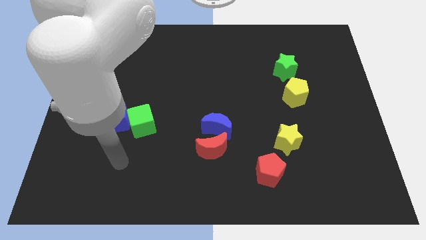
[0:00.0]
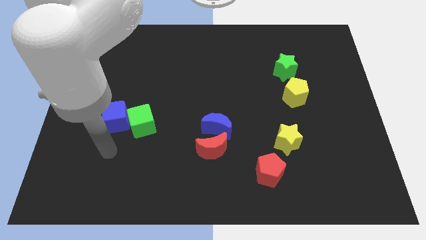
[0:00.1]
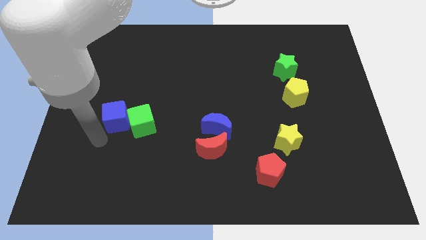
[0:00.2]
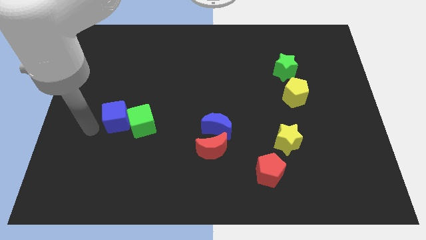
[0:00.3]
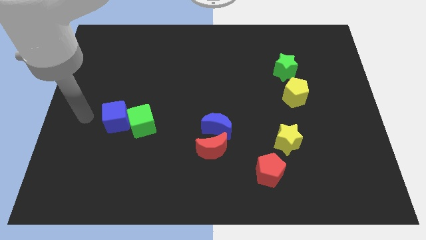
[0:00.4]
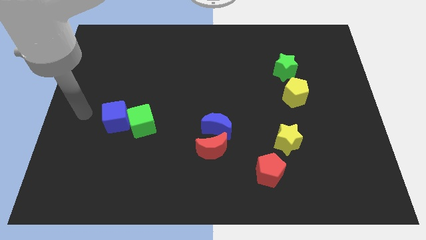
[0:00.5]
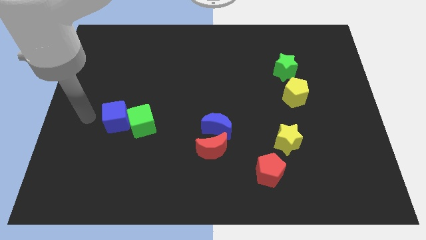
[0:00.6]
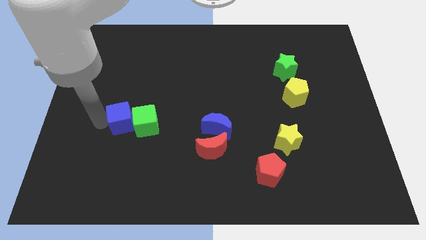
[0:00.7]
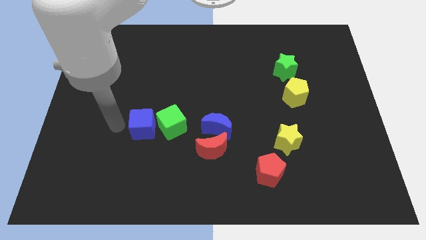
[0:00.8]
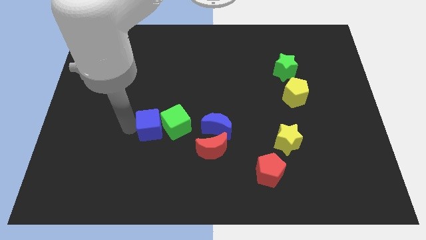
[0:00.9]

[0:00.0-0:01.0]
push blue cube in to green cube

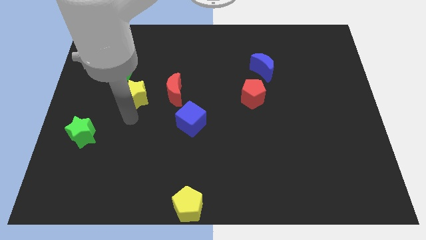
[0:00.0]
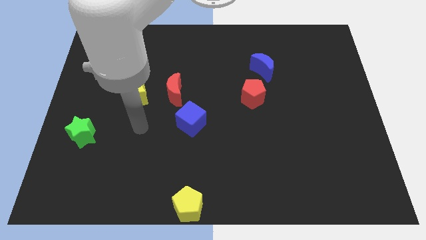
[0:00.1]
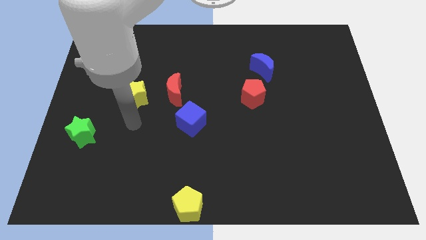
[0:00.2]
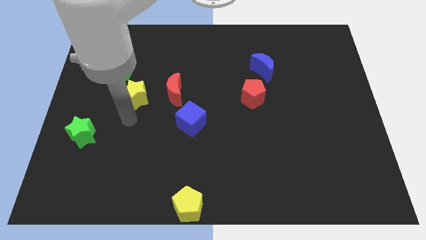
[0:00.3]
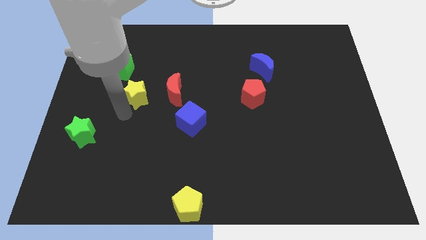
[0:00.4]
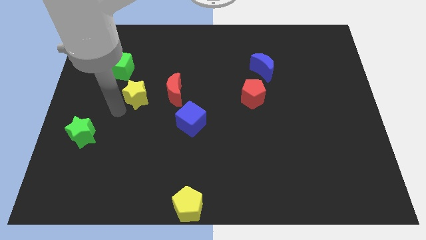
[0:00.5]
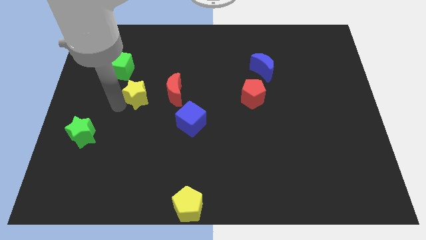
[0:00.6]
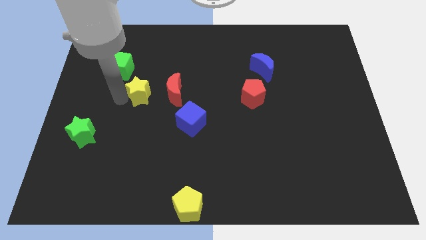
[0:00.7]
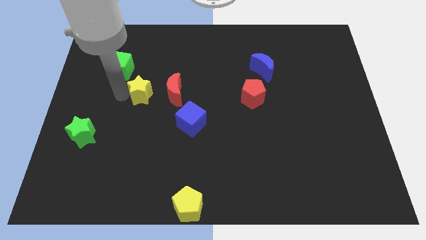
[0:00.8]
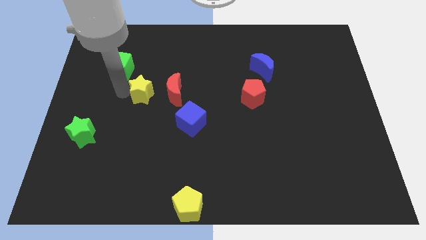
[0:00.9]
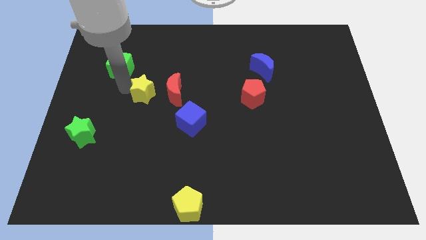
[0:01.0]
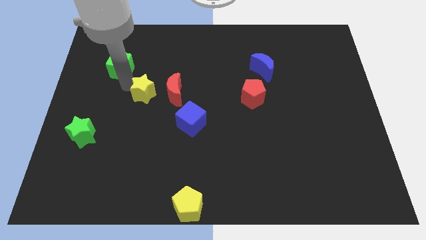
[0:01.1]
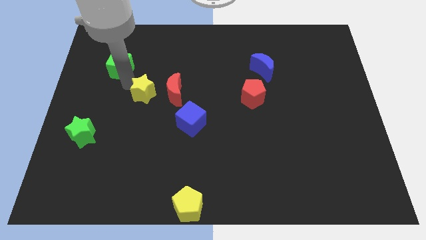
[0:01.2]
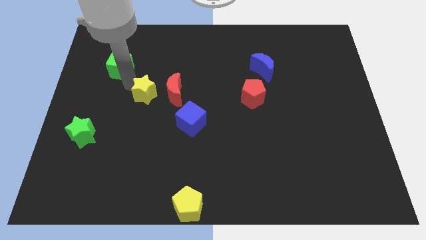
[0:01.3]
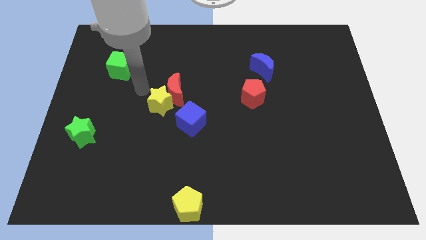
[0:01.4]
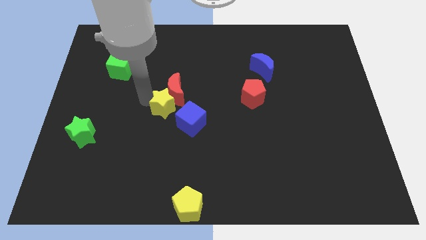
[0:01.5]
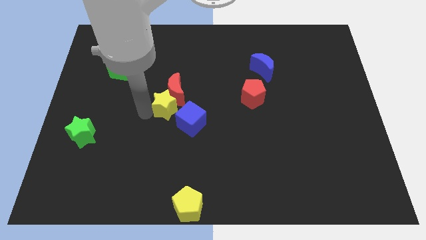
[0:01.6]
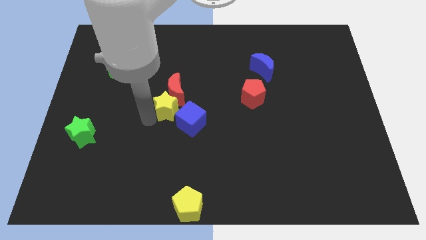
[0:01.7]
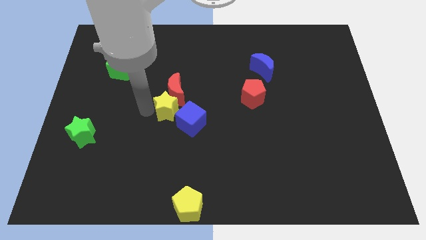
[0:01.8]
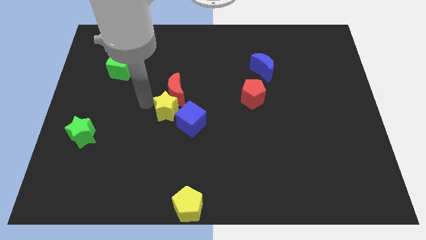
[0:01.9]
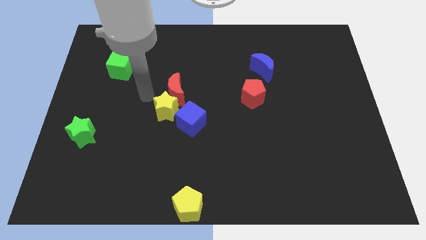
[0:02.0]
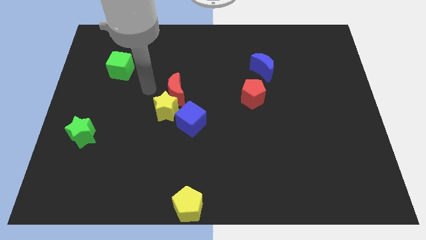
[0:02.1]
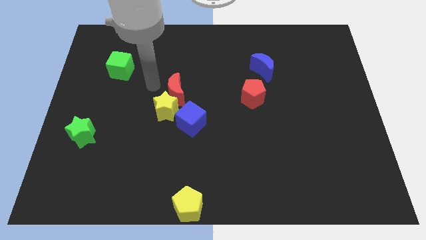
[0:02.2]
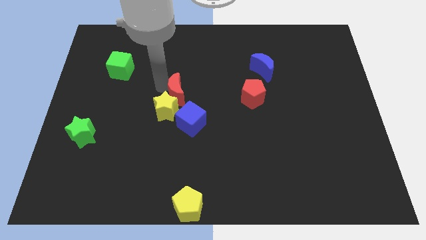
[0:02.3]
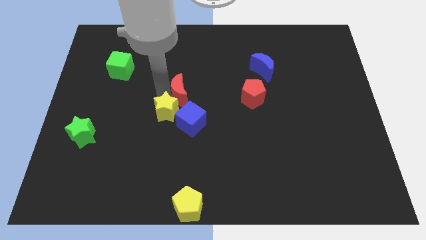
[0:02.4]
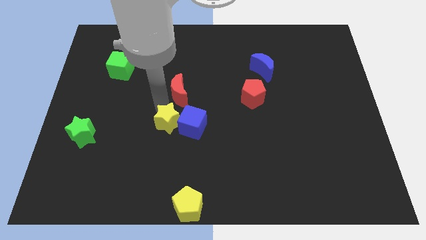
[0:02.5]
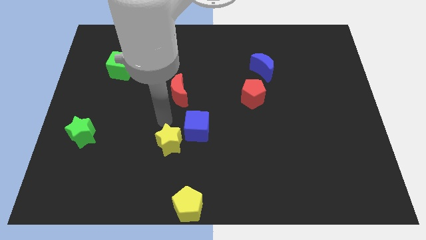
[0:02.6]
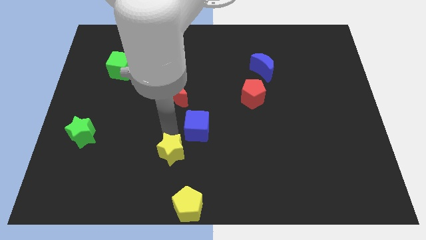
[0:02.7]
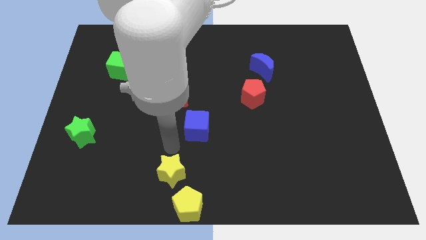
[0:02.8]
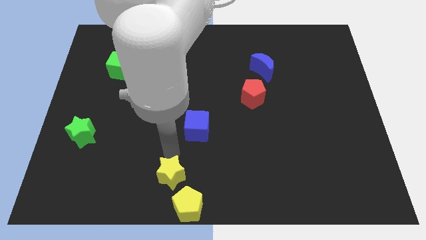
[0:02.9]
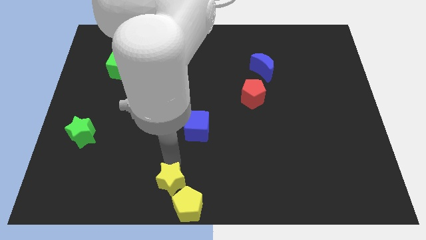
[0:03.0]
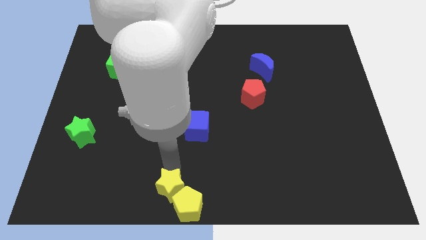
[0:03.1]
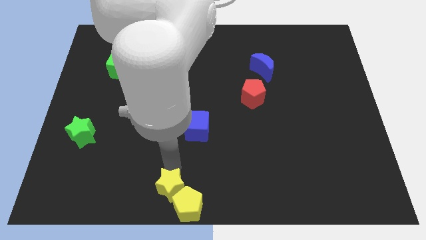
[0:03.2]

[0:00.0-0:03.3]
move the yellow star to the top of the yellow pentagon

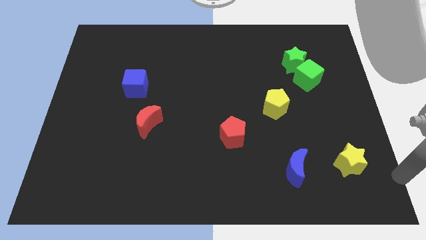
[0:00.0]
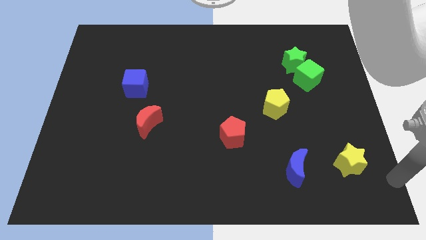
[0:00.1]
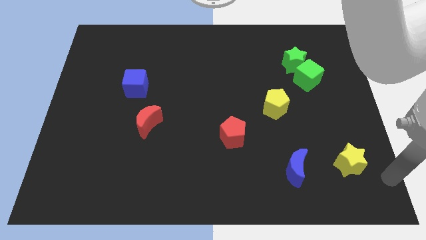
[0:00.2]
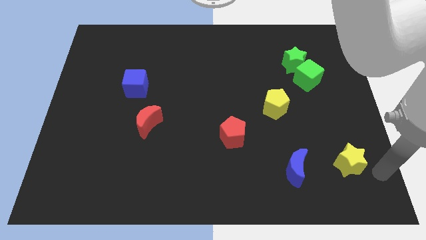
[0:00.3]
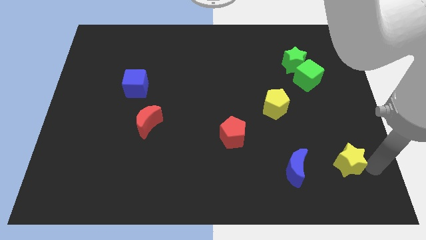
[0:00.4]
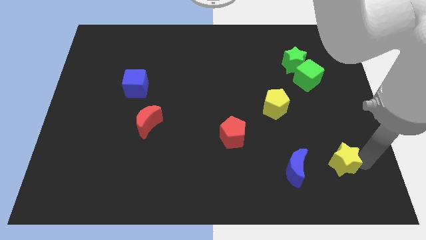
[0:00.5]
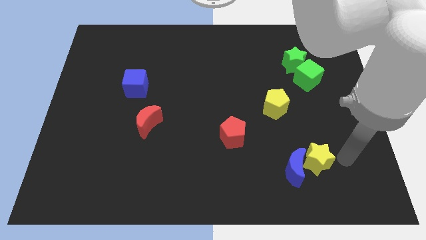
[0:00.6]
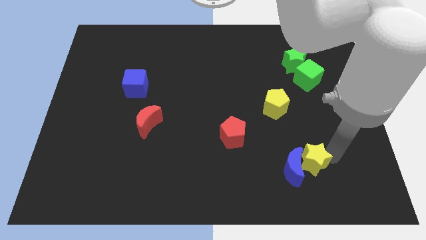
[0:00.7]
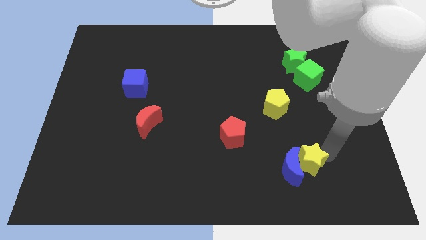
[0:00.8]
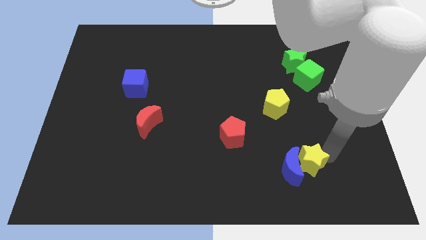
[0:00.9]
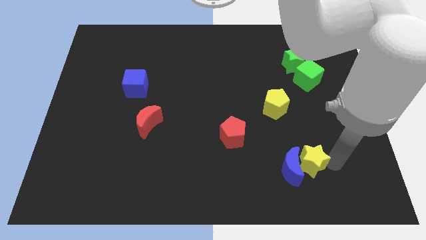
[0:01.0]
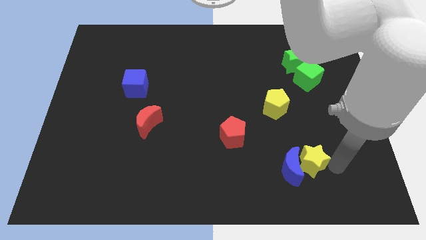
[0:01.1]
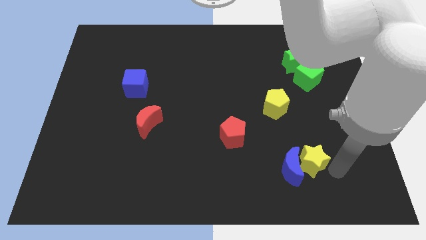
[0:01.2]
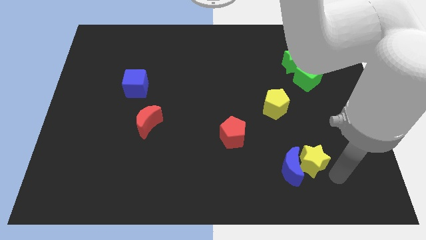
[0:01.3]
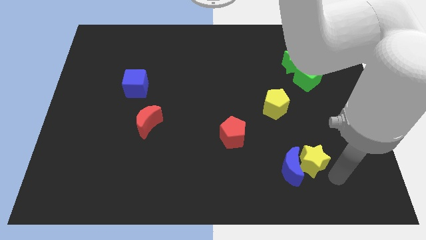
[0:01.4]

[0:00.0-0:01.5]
slide the yellow star towards the right side of the blue moon

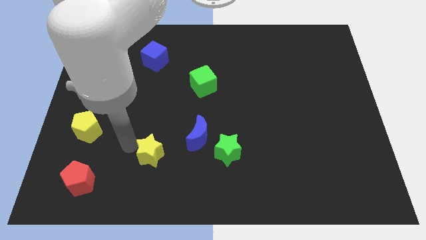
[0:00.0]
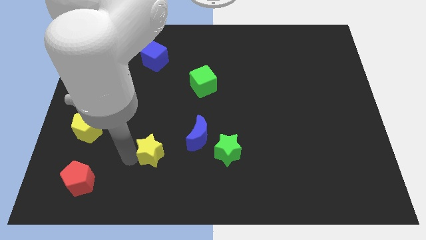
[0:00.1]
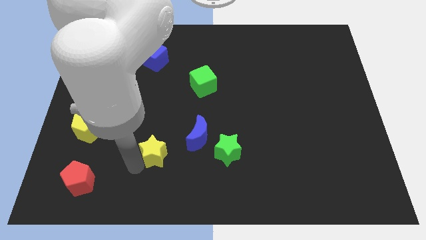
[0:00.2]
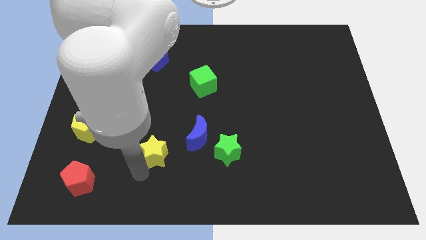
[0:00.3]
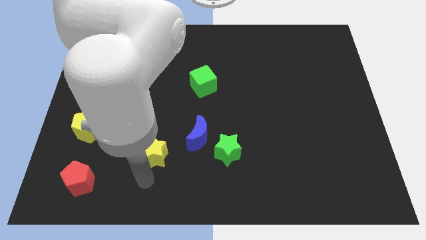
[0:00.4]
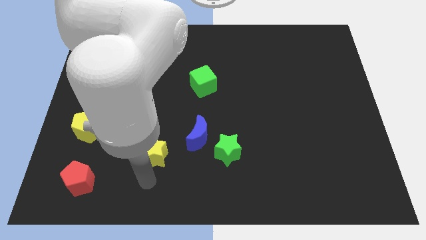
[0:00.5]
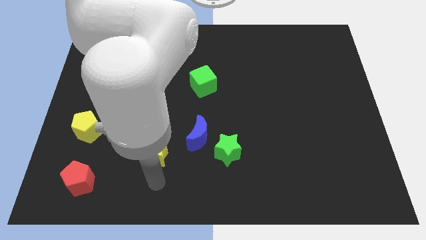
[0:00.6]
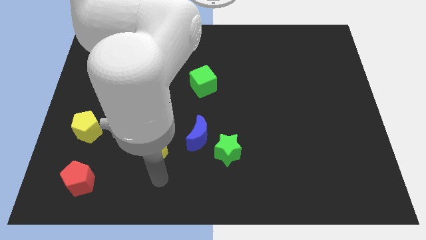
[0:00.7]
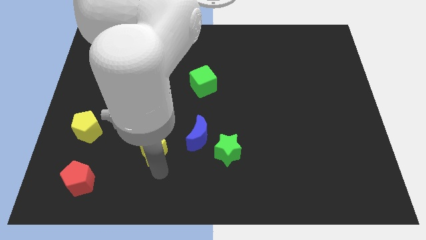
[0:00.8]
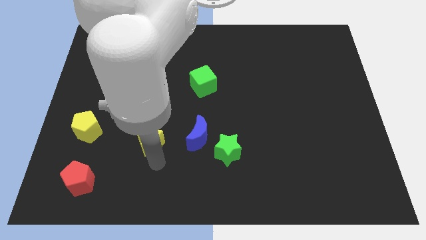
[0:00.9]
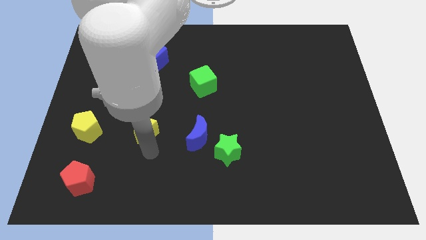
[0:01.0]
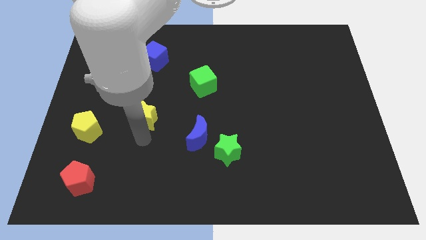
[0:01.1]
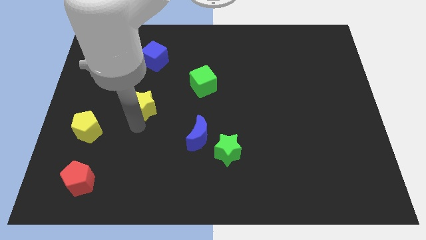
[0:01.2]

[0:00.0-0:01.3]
place the yellow star below the blue cube

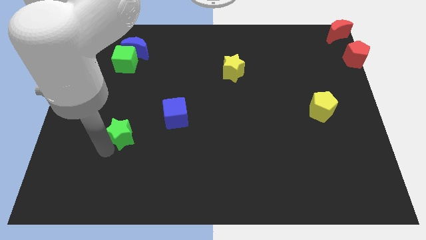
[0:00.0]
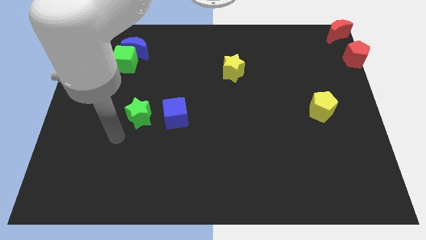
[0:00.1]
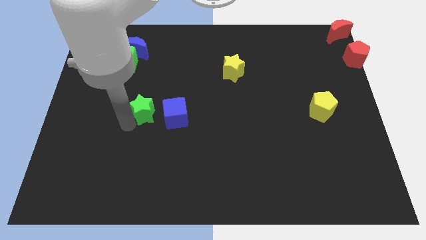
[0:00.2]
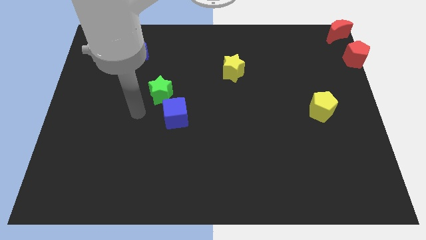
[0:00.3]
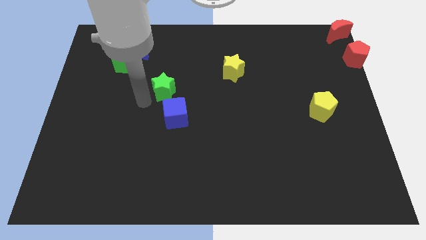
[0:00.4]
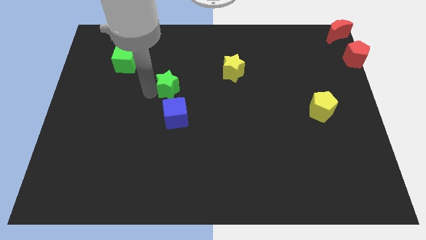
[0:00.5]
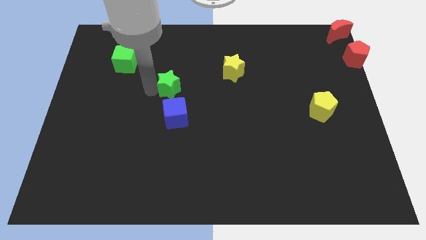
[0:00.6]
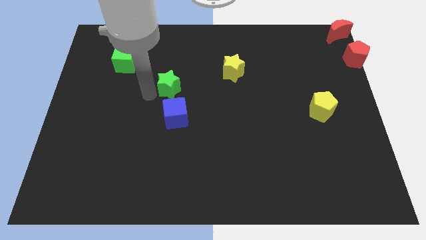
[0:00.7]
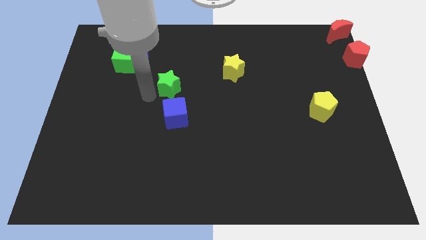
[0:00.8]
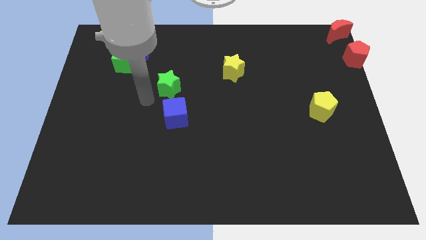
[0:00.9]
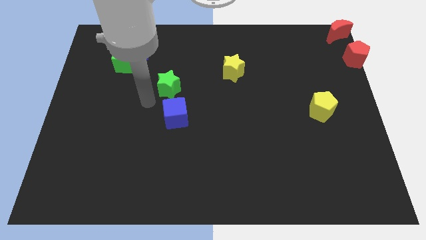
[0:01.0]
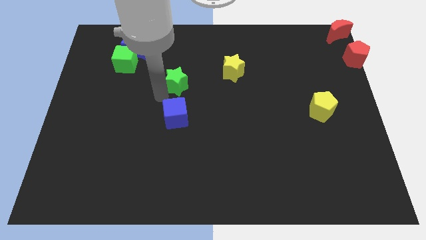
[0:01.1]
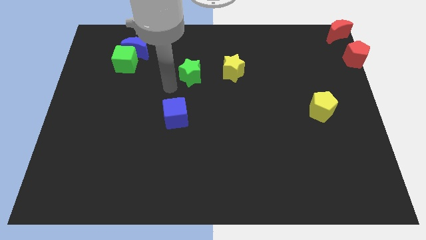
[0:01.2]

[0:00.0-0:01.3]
place the green star left to the yellow star

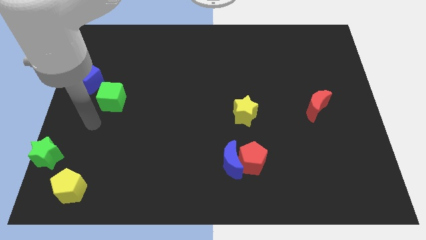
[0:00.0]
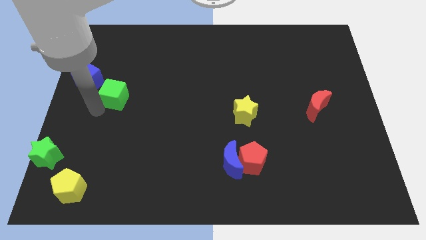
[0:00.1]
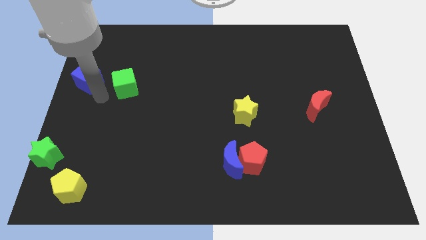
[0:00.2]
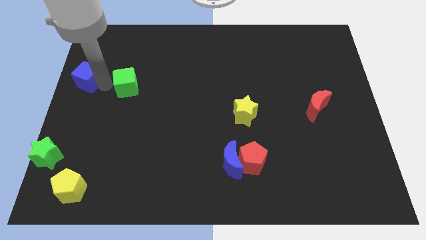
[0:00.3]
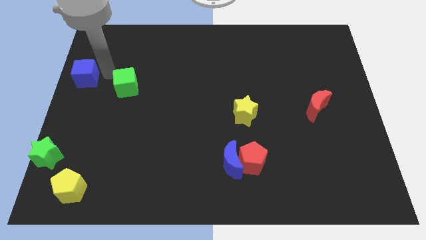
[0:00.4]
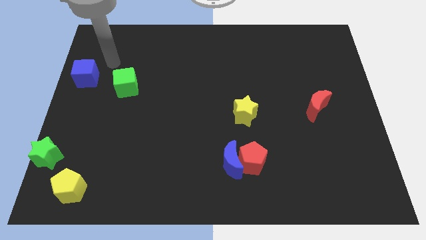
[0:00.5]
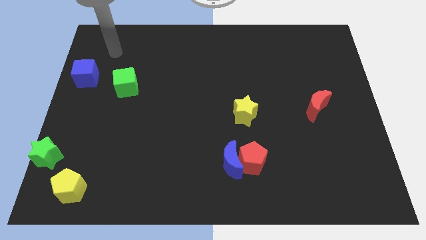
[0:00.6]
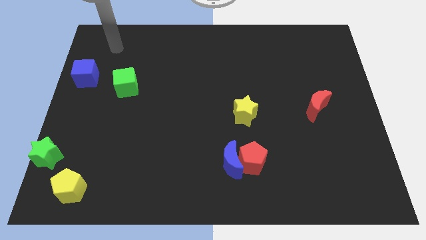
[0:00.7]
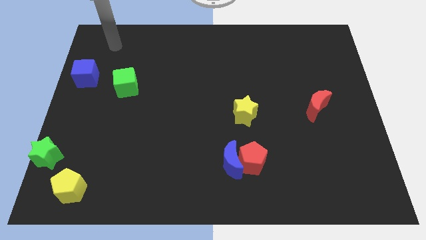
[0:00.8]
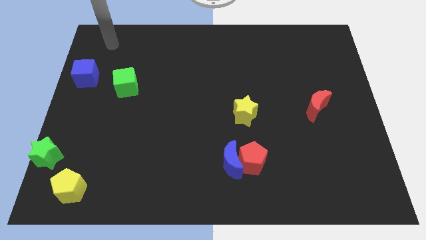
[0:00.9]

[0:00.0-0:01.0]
move the blue cube slightly away from the blue green cube
